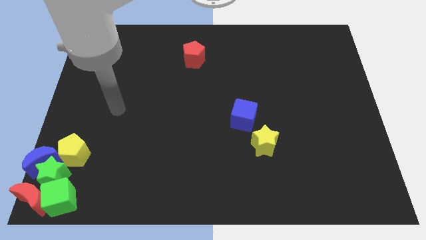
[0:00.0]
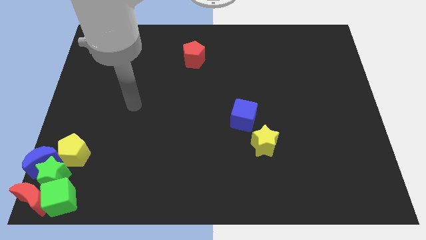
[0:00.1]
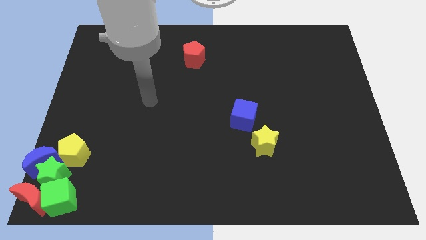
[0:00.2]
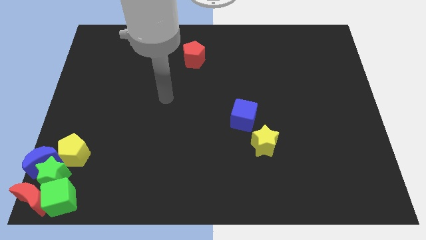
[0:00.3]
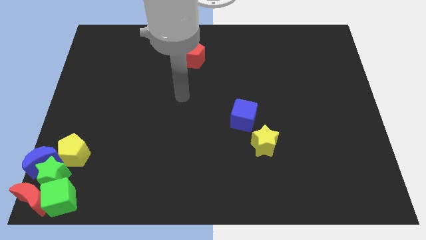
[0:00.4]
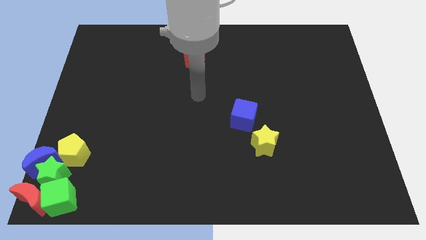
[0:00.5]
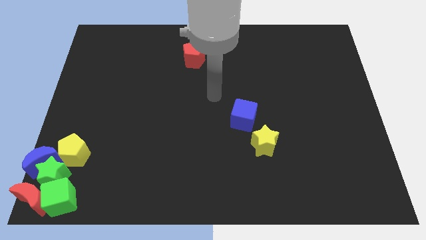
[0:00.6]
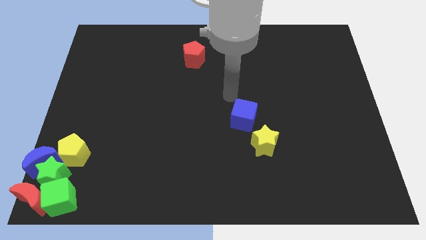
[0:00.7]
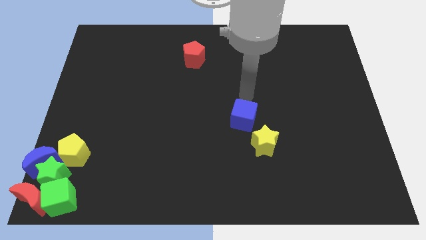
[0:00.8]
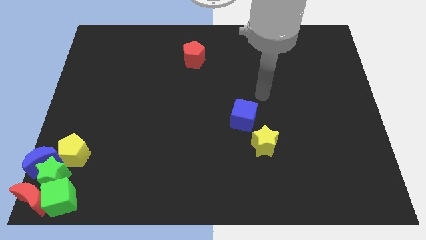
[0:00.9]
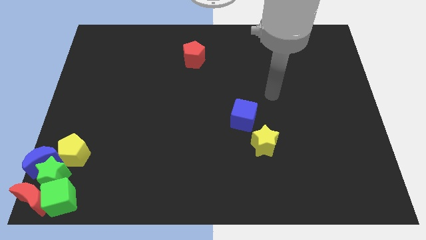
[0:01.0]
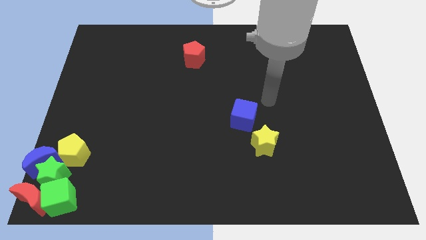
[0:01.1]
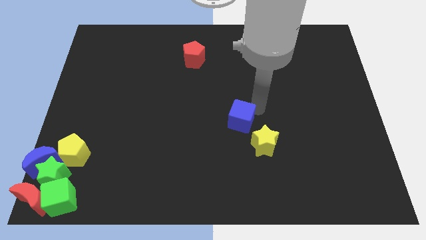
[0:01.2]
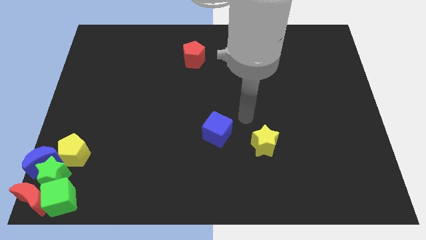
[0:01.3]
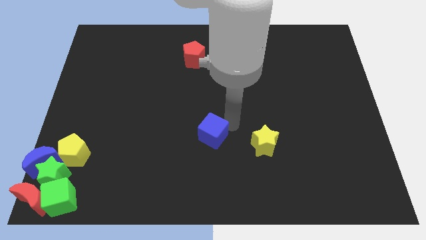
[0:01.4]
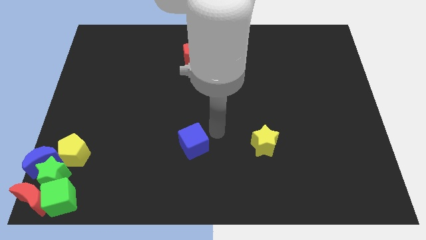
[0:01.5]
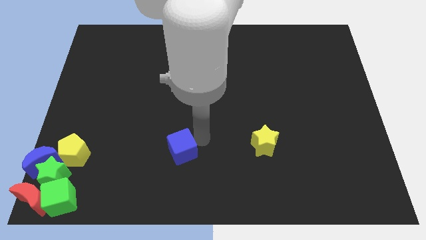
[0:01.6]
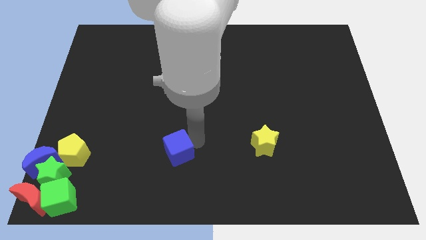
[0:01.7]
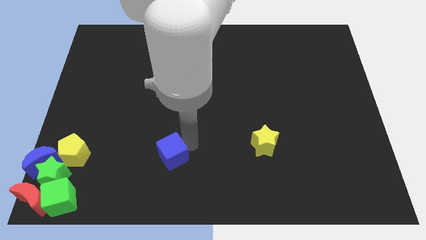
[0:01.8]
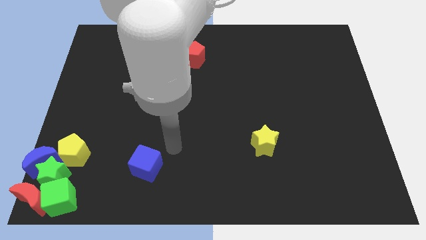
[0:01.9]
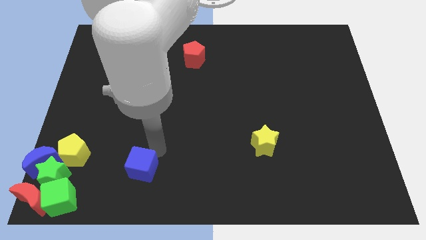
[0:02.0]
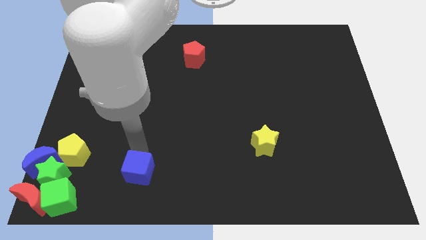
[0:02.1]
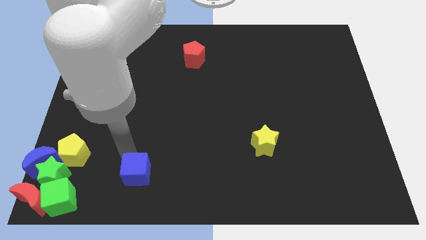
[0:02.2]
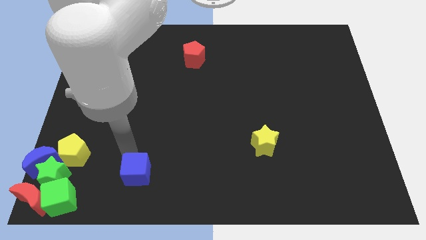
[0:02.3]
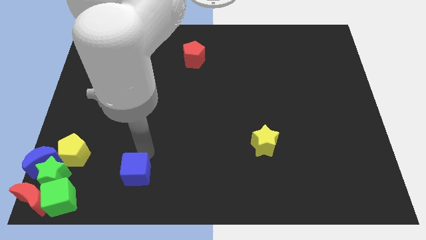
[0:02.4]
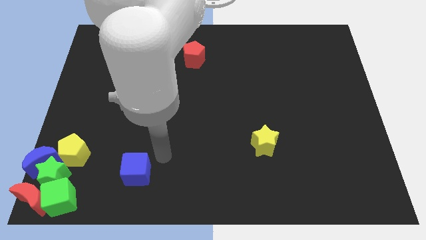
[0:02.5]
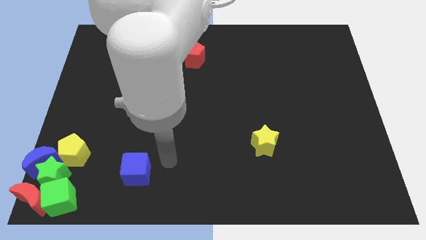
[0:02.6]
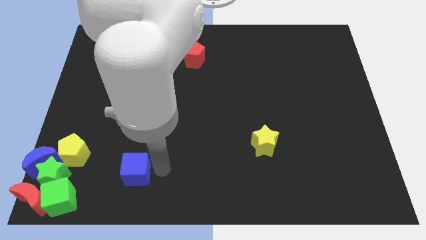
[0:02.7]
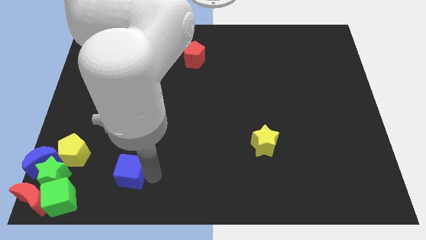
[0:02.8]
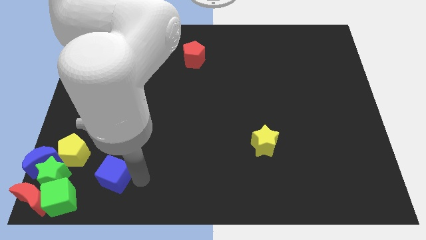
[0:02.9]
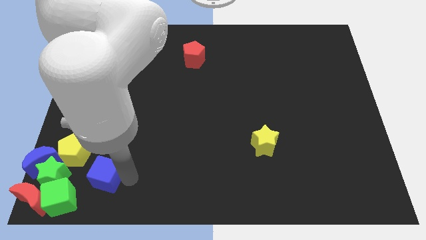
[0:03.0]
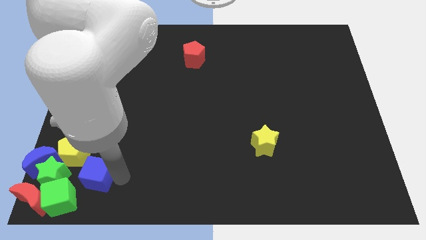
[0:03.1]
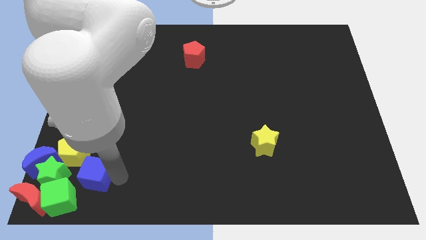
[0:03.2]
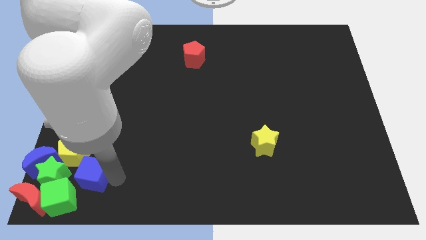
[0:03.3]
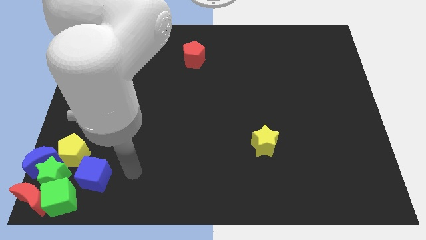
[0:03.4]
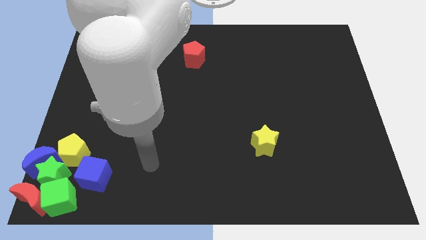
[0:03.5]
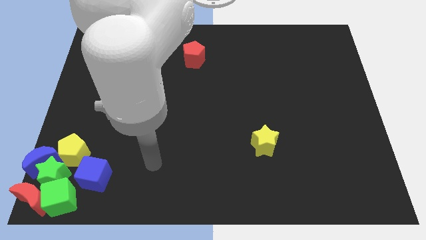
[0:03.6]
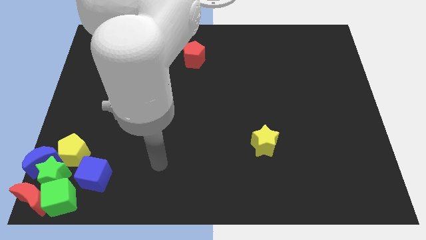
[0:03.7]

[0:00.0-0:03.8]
place the blue cube right to the green star

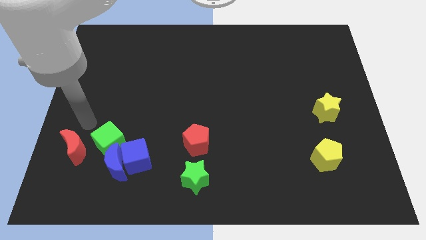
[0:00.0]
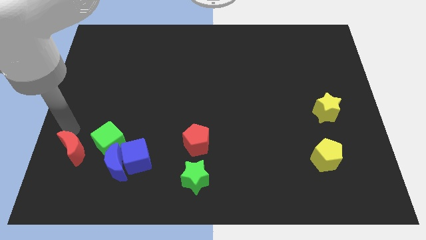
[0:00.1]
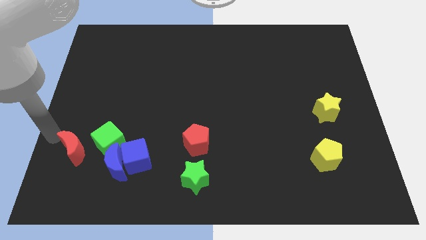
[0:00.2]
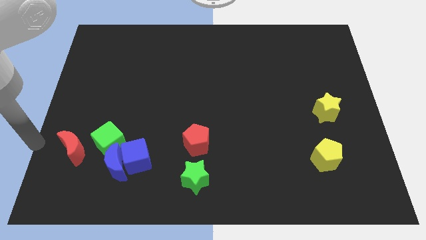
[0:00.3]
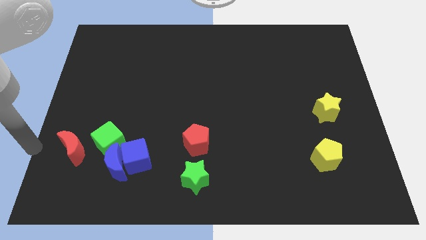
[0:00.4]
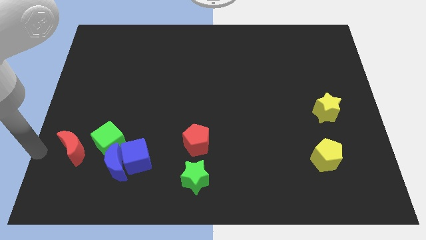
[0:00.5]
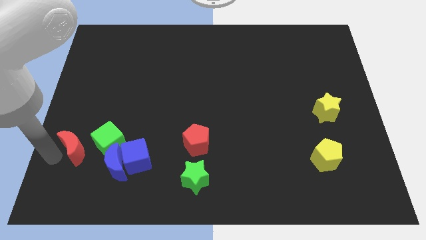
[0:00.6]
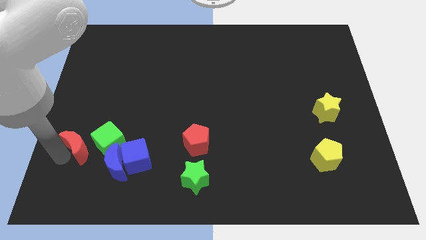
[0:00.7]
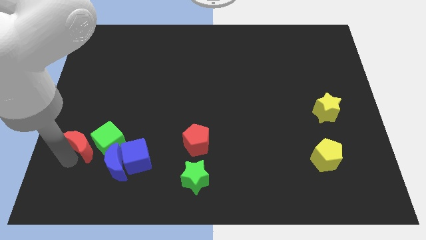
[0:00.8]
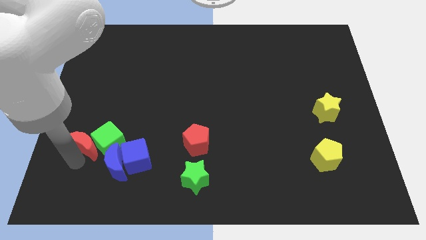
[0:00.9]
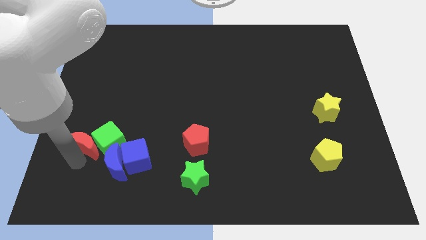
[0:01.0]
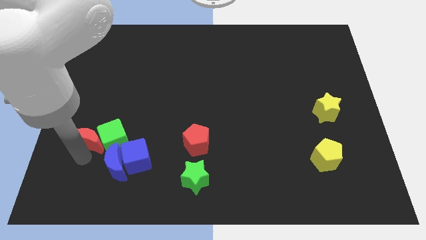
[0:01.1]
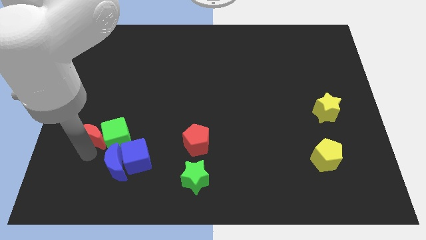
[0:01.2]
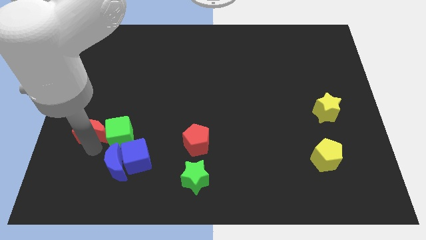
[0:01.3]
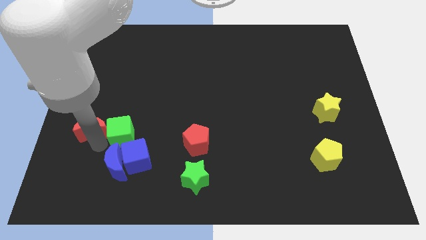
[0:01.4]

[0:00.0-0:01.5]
push the red crescent into the green cube to the left

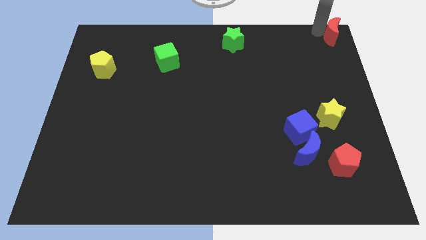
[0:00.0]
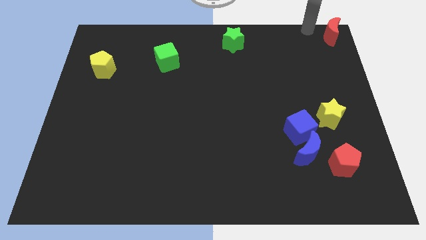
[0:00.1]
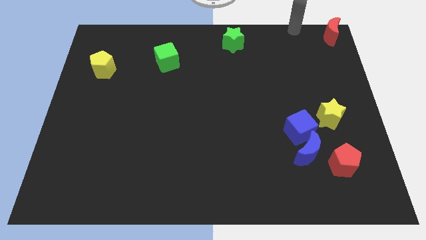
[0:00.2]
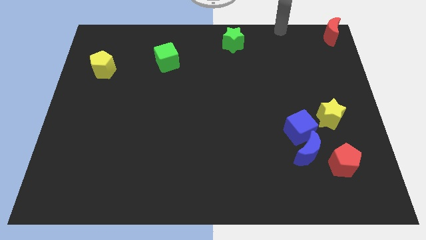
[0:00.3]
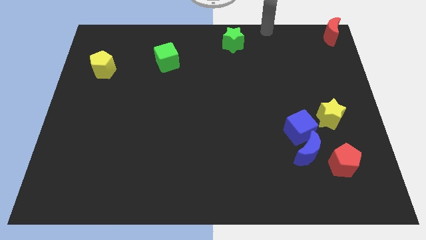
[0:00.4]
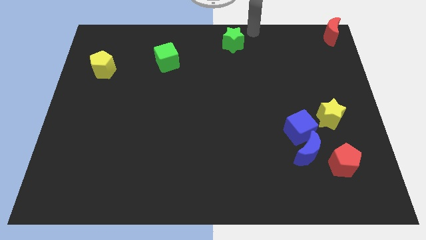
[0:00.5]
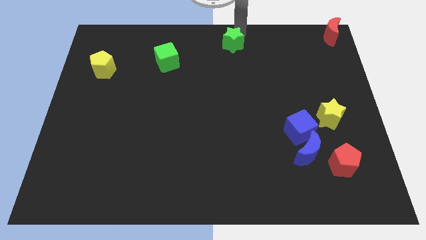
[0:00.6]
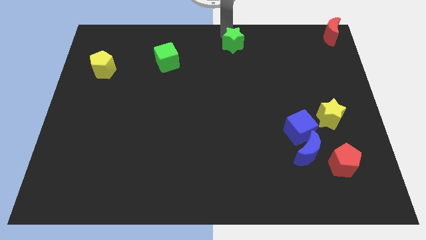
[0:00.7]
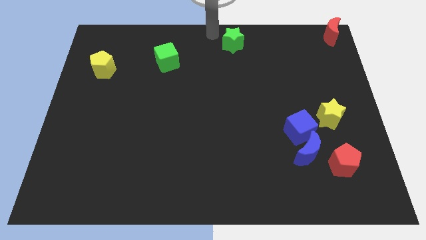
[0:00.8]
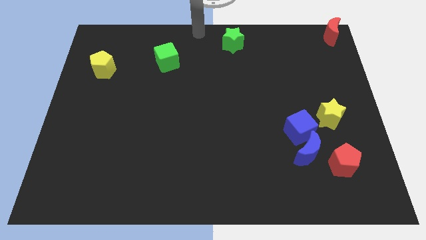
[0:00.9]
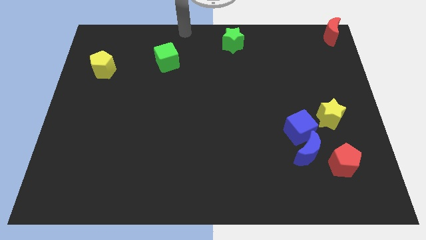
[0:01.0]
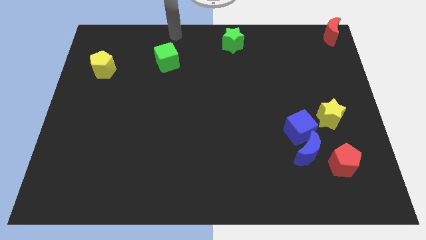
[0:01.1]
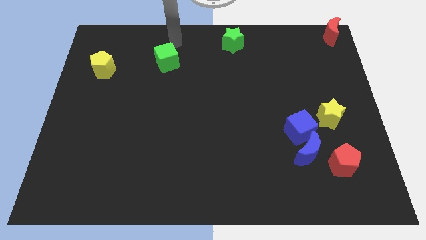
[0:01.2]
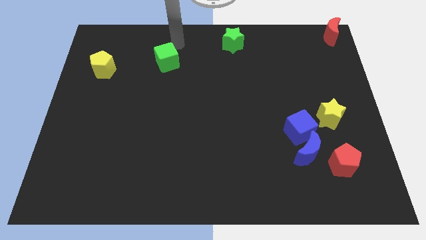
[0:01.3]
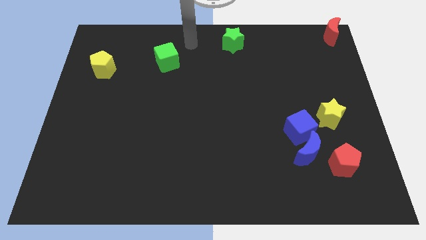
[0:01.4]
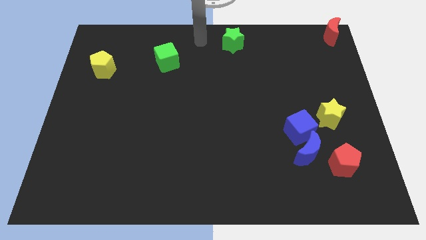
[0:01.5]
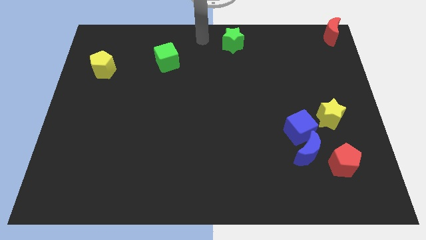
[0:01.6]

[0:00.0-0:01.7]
move your arm towards the green star

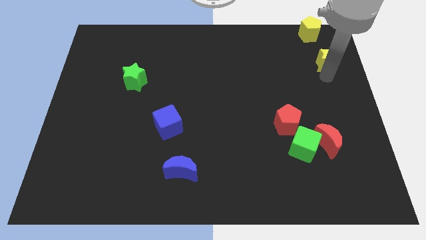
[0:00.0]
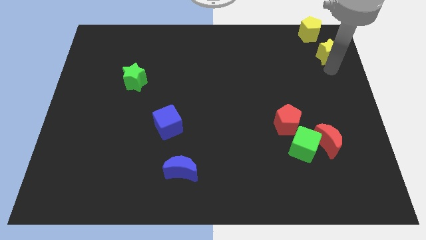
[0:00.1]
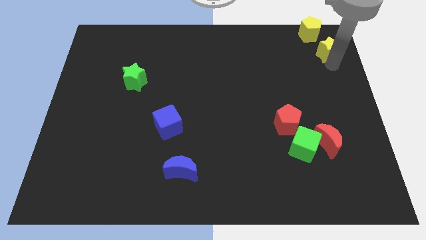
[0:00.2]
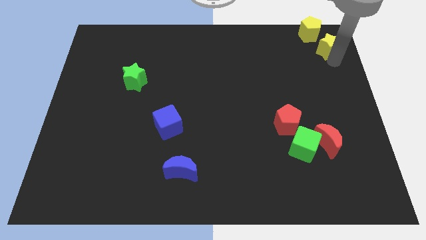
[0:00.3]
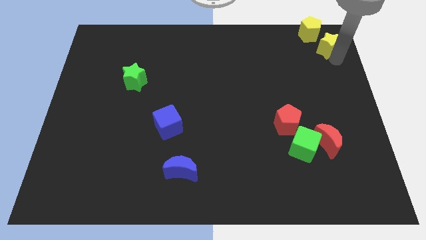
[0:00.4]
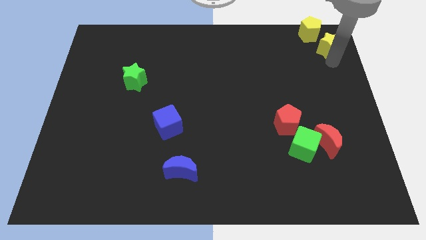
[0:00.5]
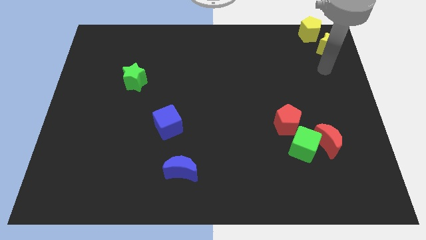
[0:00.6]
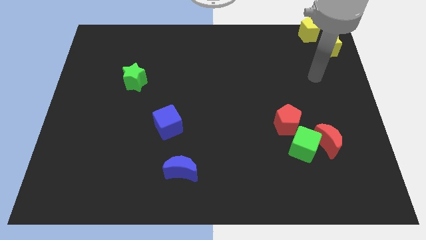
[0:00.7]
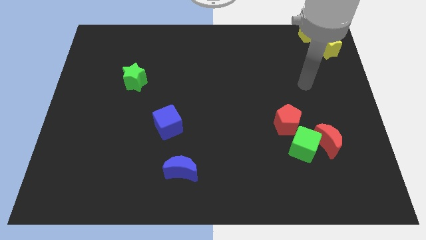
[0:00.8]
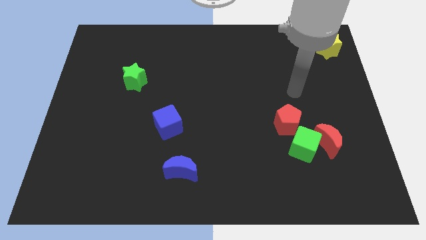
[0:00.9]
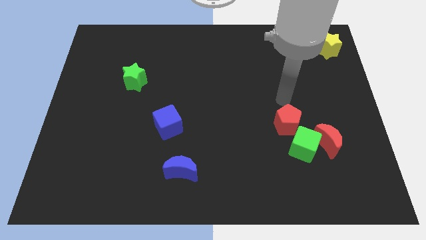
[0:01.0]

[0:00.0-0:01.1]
move yellow star parallel to red pentagon

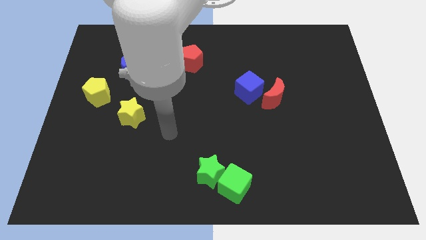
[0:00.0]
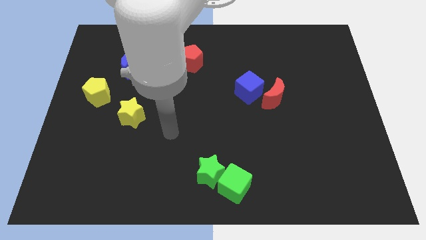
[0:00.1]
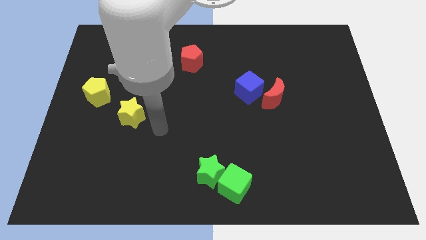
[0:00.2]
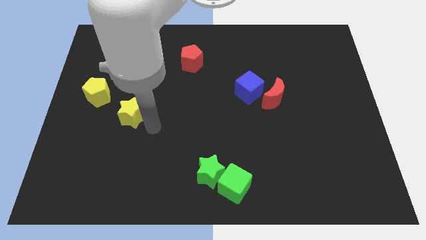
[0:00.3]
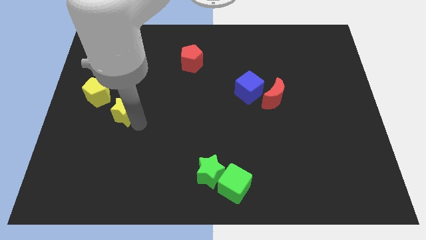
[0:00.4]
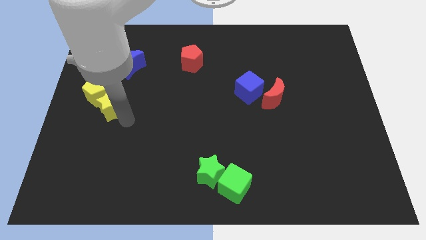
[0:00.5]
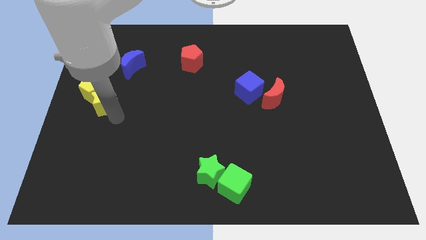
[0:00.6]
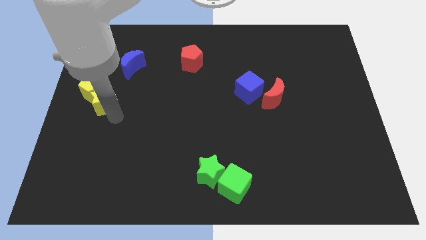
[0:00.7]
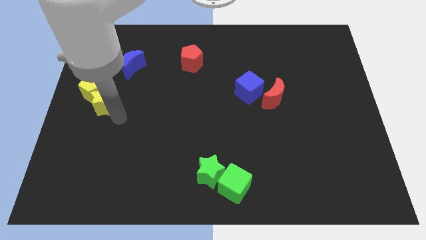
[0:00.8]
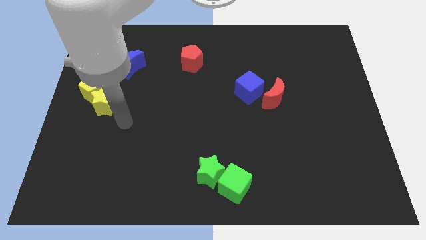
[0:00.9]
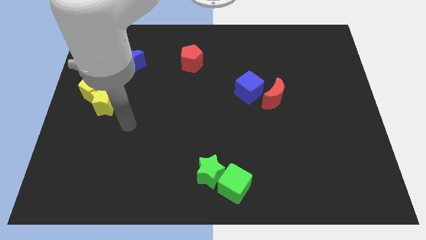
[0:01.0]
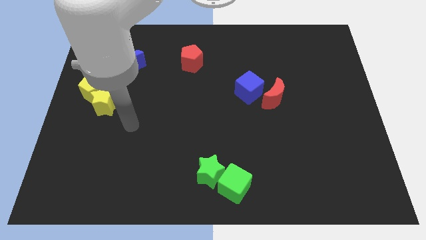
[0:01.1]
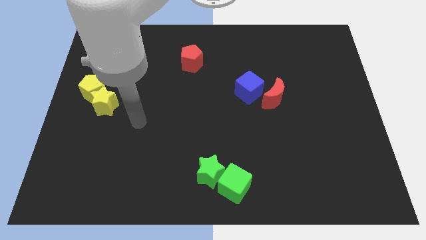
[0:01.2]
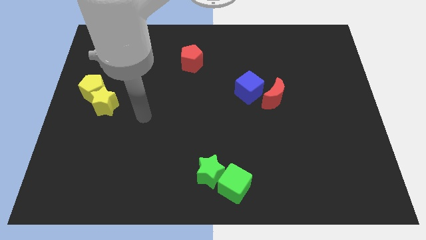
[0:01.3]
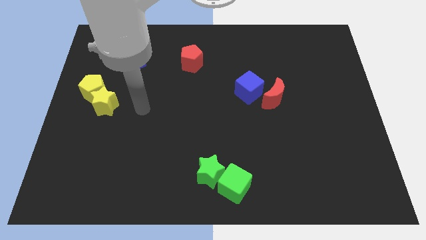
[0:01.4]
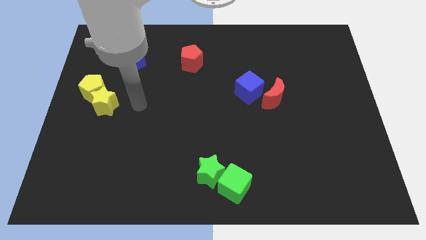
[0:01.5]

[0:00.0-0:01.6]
push the yellow star into the yellow pentagon
